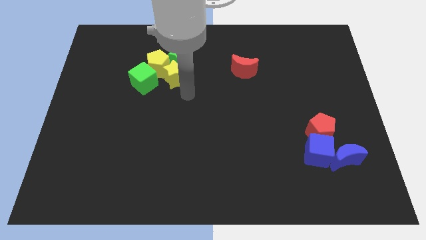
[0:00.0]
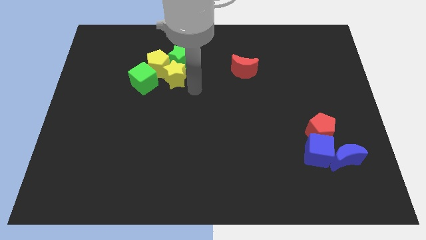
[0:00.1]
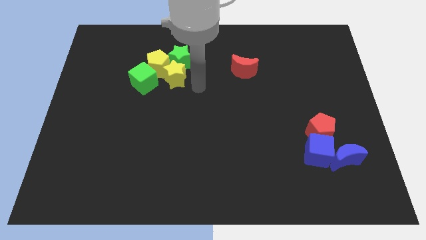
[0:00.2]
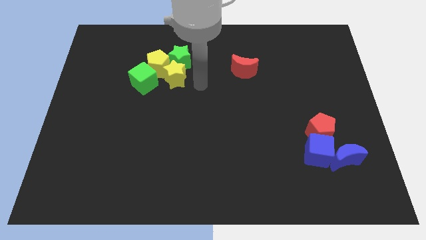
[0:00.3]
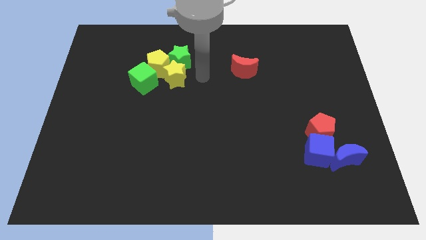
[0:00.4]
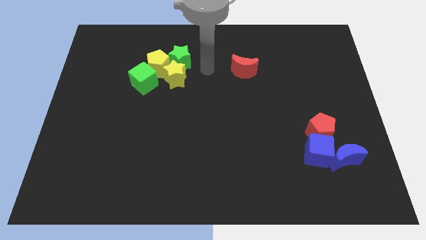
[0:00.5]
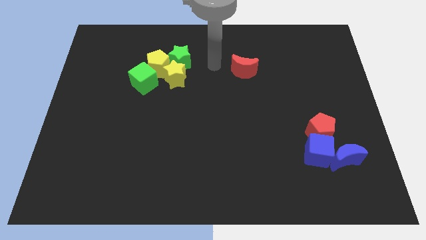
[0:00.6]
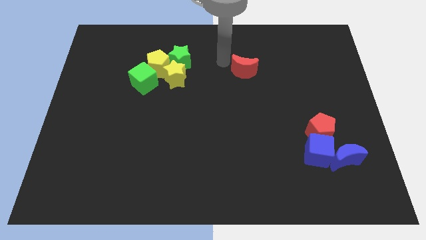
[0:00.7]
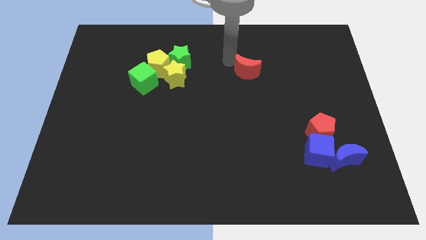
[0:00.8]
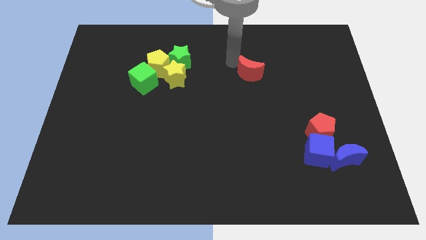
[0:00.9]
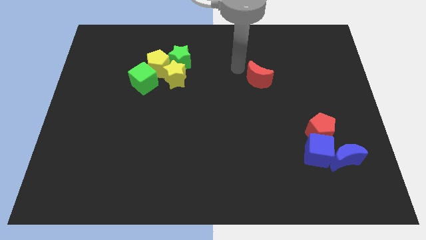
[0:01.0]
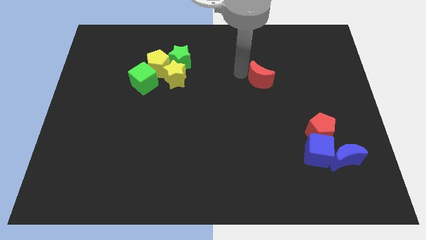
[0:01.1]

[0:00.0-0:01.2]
touch the red moon

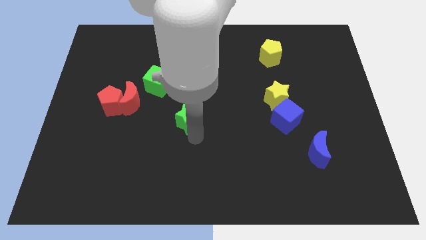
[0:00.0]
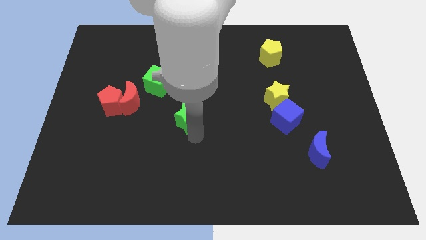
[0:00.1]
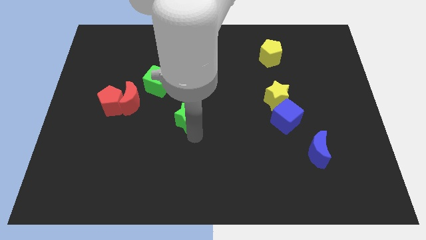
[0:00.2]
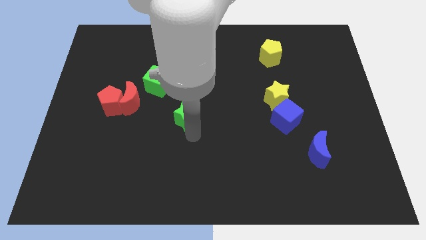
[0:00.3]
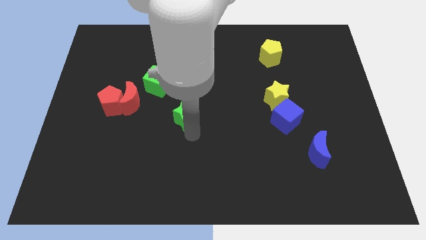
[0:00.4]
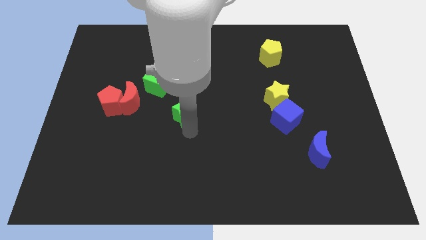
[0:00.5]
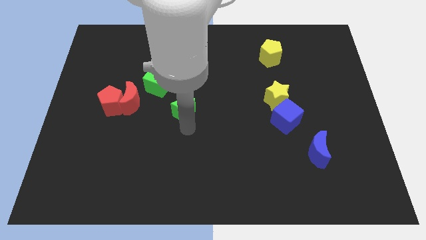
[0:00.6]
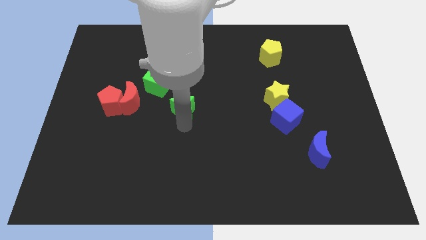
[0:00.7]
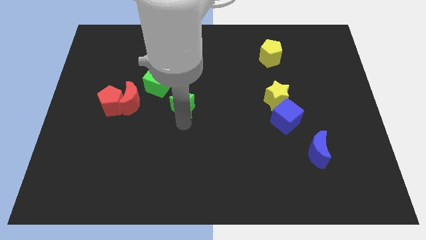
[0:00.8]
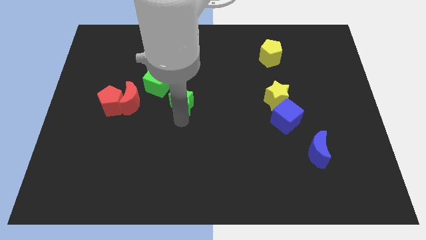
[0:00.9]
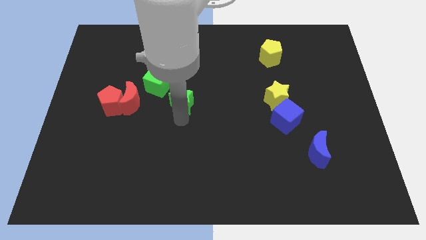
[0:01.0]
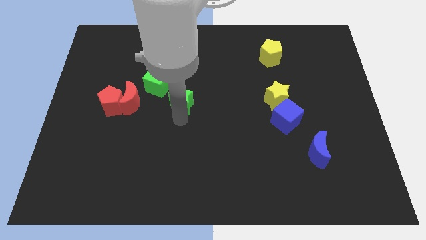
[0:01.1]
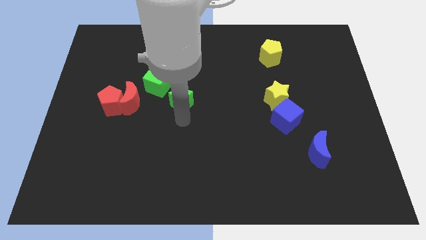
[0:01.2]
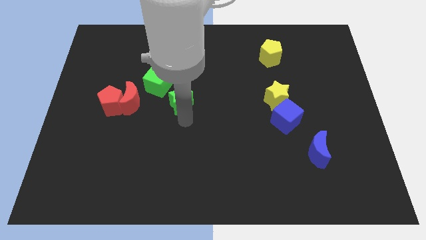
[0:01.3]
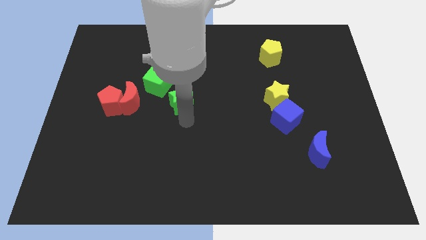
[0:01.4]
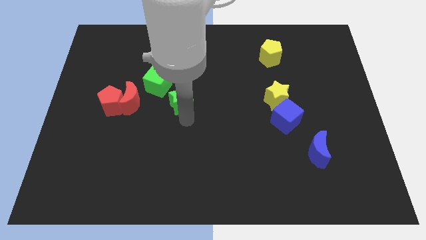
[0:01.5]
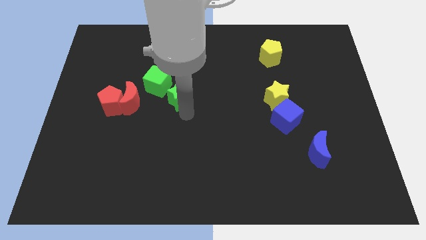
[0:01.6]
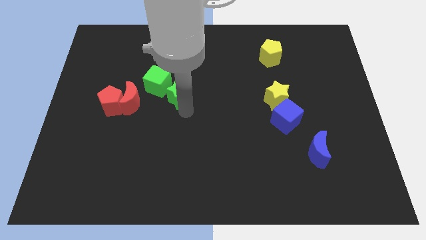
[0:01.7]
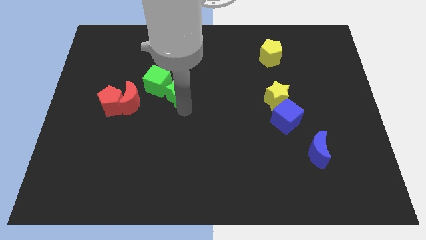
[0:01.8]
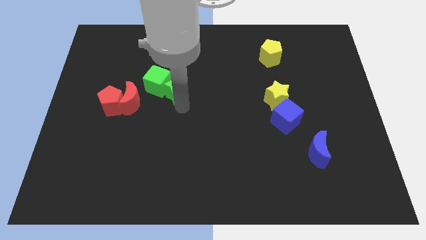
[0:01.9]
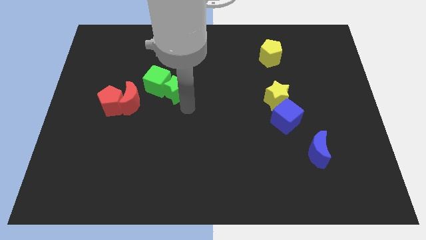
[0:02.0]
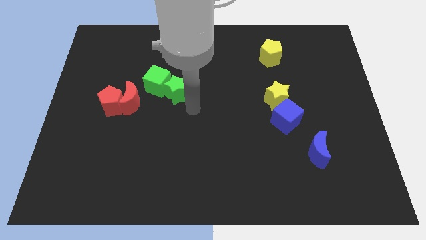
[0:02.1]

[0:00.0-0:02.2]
drag the green star into the right side of the green cube

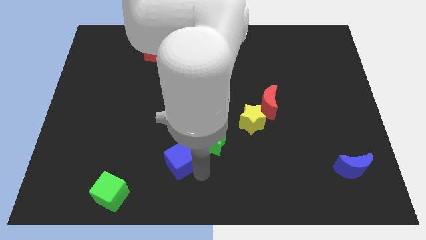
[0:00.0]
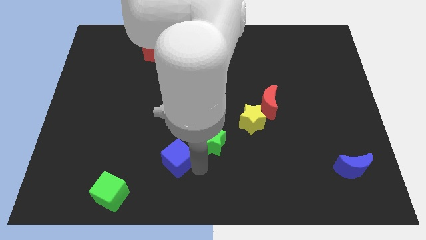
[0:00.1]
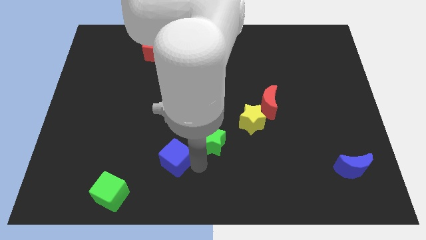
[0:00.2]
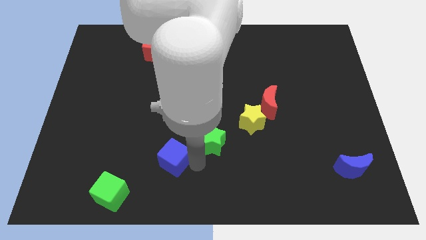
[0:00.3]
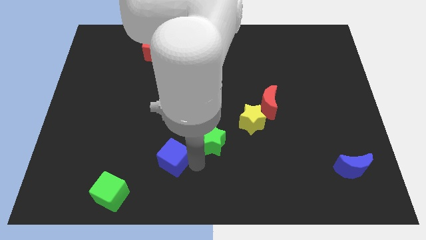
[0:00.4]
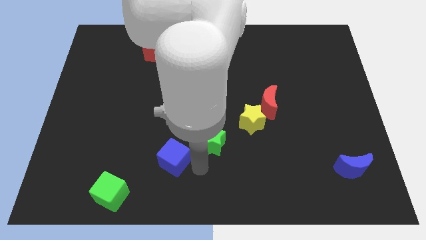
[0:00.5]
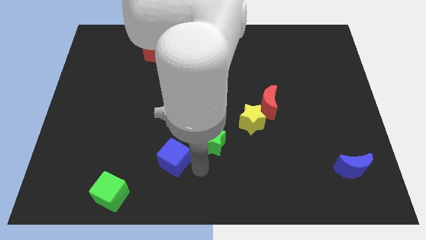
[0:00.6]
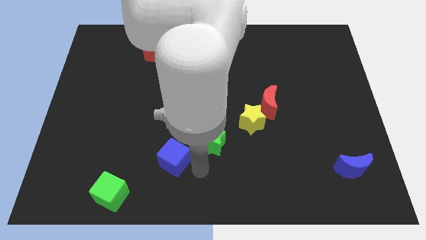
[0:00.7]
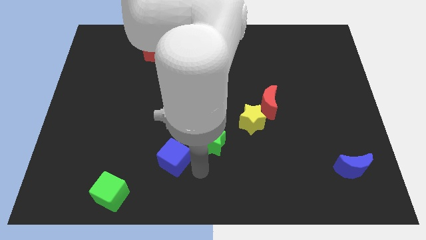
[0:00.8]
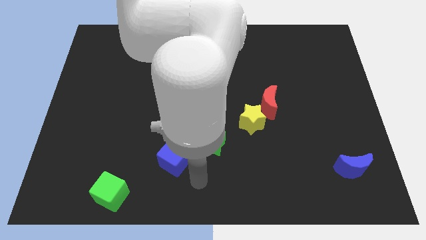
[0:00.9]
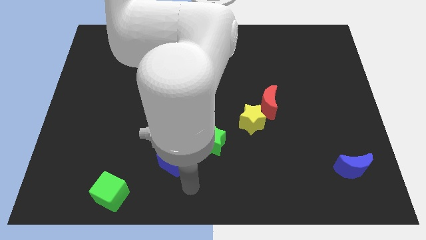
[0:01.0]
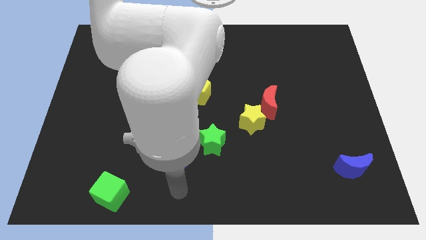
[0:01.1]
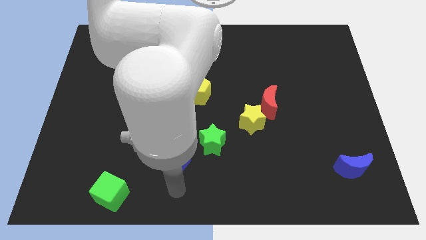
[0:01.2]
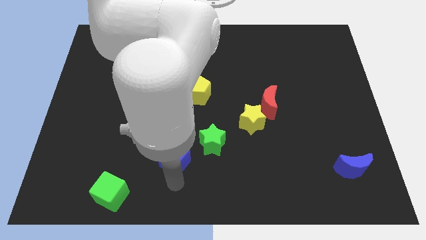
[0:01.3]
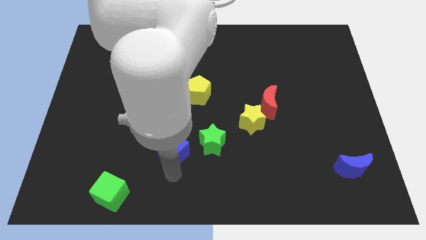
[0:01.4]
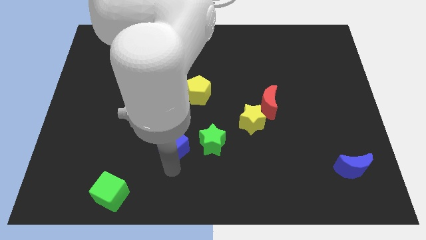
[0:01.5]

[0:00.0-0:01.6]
place the blue cube to the left side of the green star

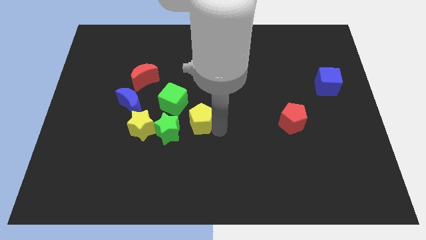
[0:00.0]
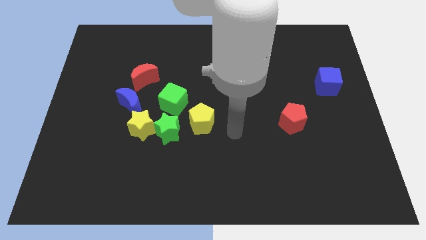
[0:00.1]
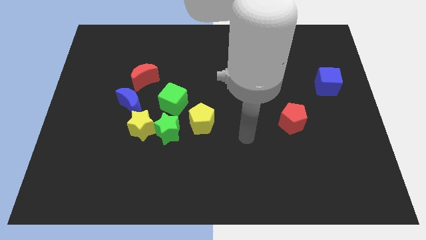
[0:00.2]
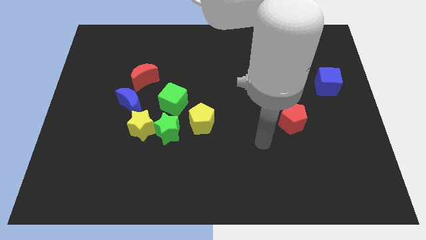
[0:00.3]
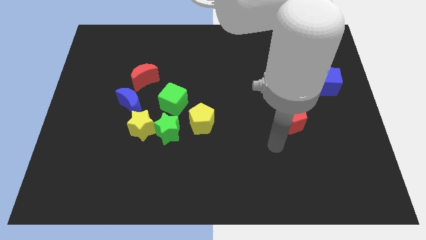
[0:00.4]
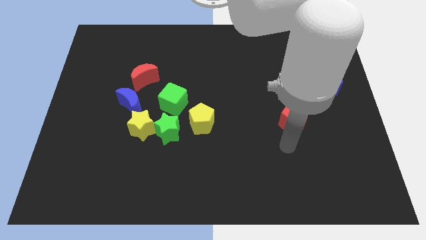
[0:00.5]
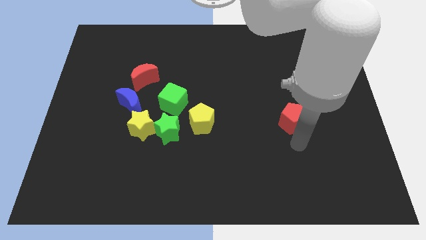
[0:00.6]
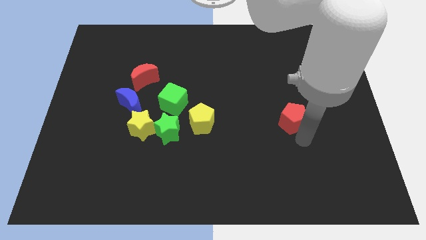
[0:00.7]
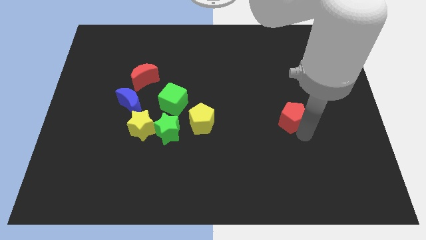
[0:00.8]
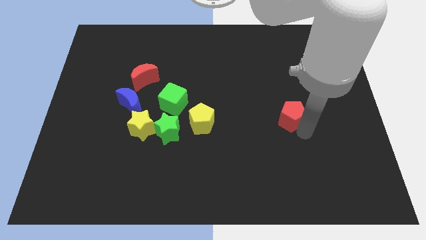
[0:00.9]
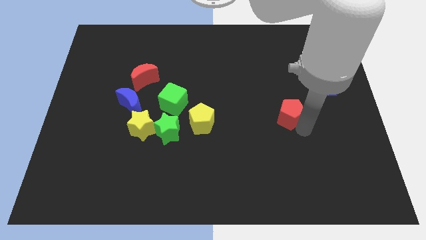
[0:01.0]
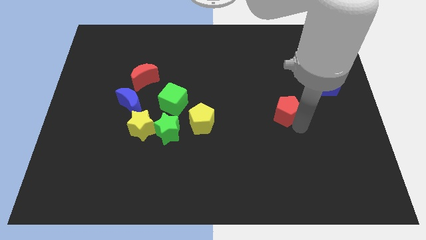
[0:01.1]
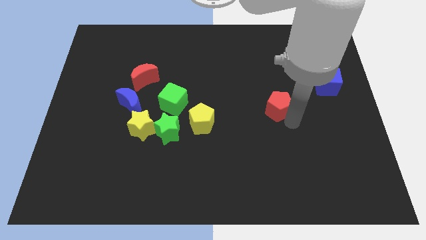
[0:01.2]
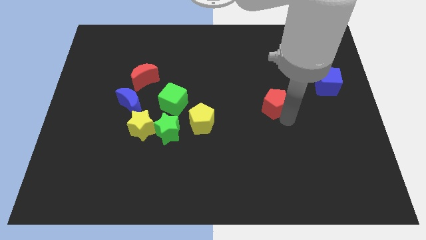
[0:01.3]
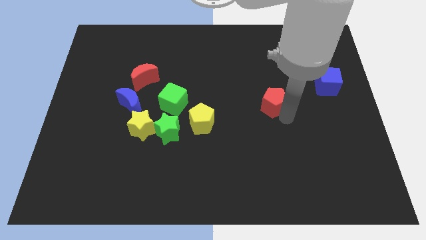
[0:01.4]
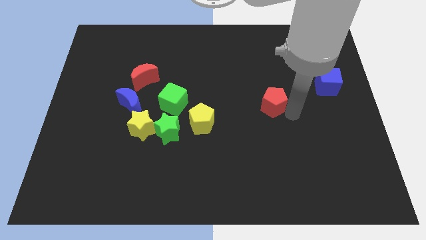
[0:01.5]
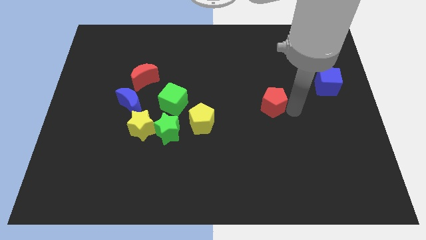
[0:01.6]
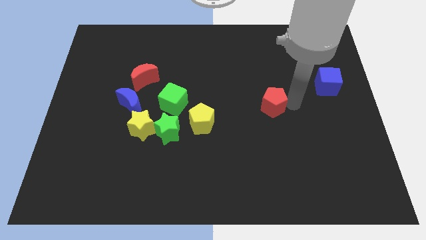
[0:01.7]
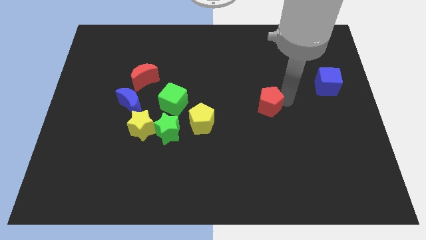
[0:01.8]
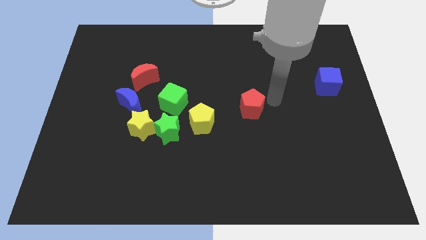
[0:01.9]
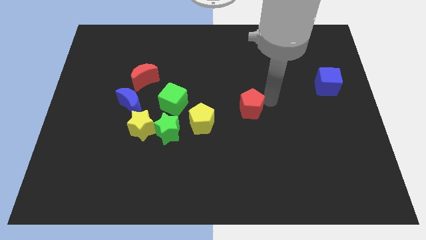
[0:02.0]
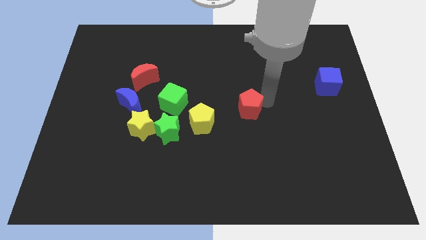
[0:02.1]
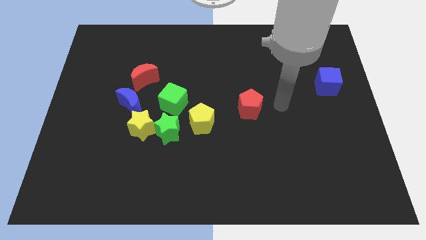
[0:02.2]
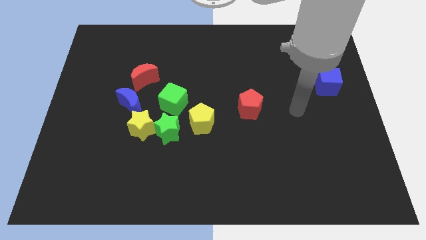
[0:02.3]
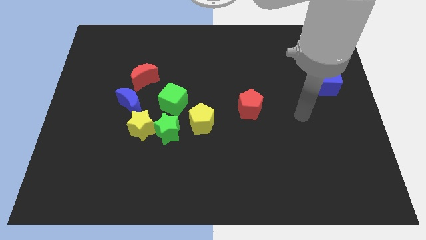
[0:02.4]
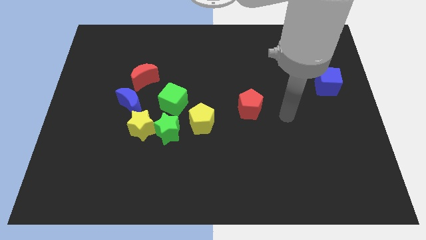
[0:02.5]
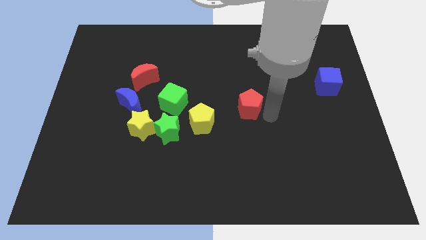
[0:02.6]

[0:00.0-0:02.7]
put the red pentagon parallel to green cube

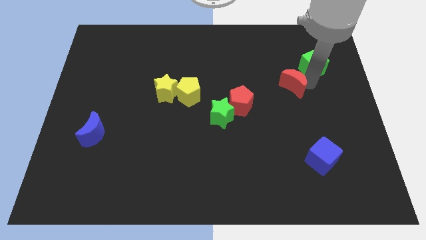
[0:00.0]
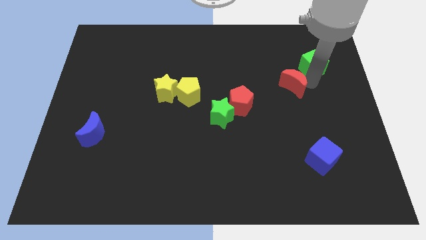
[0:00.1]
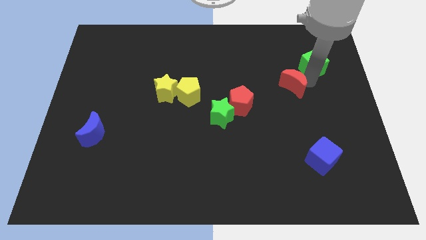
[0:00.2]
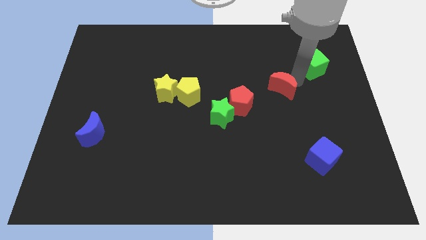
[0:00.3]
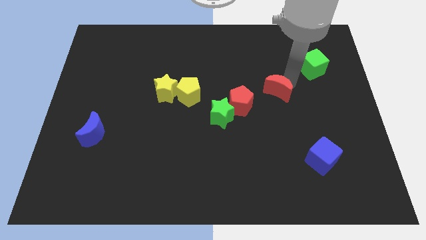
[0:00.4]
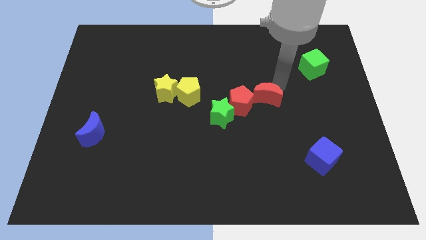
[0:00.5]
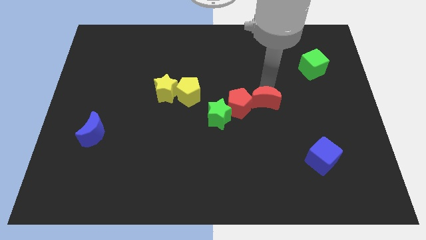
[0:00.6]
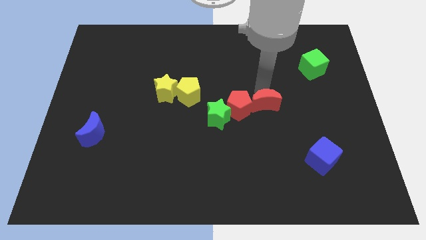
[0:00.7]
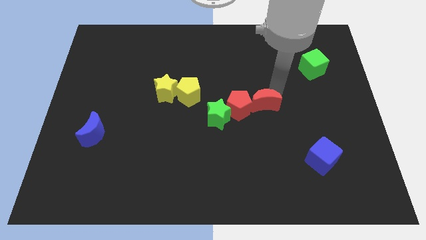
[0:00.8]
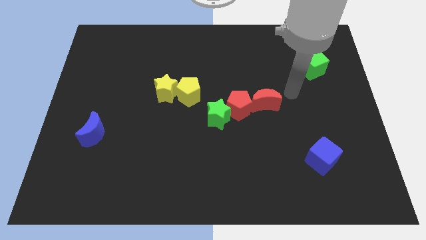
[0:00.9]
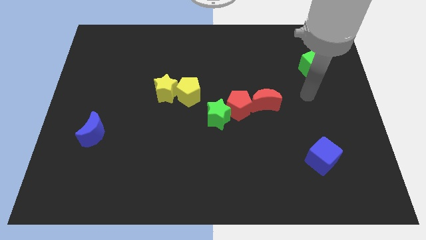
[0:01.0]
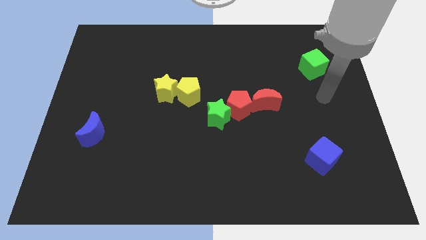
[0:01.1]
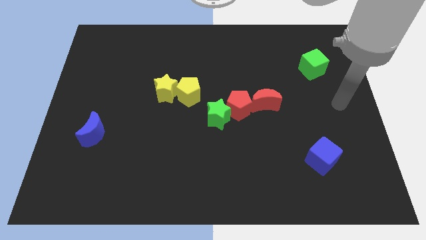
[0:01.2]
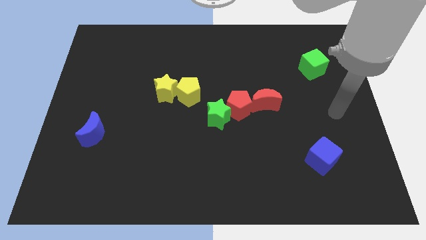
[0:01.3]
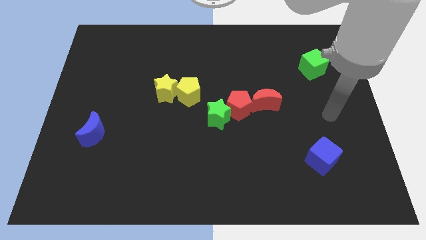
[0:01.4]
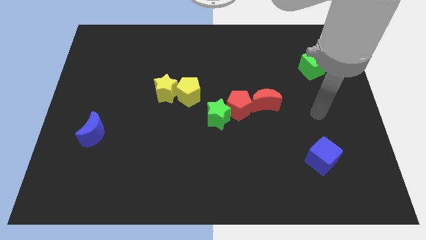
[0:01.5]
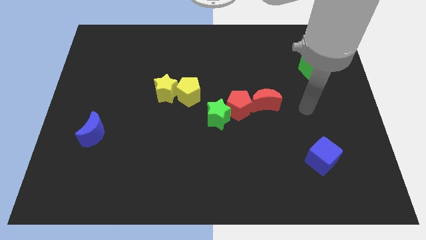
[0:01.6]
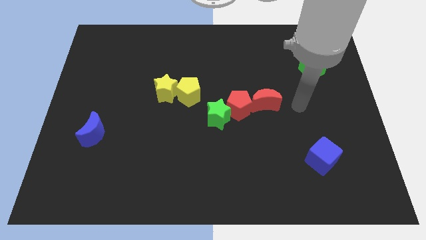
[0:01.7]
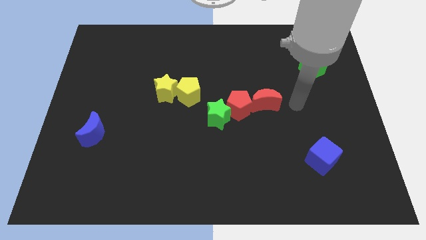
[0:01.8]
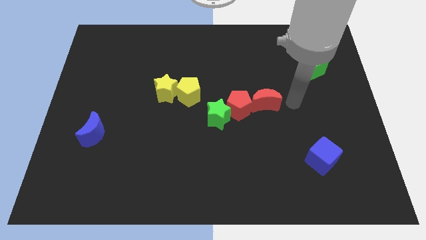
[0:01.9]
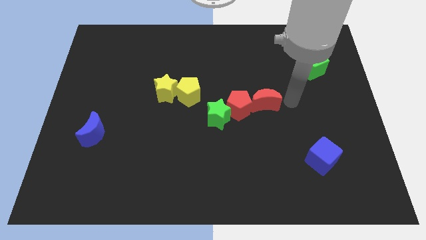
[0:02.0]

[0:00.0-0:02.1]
push the red pentagon with the red moon
